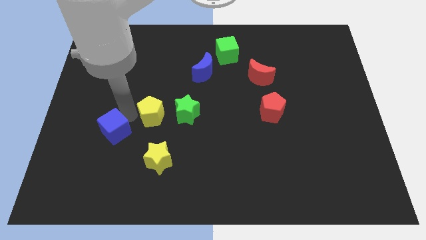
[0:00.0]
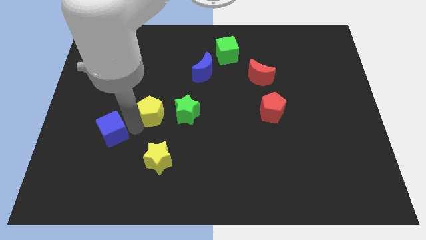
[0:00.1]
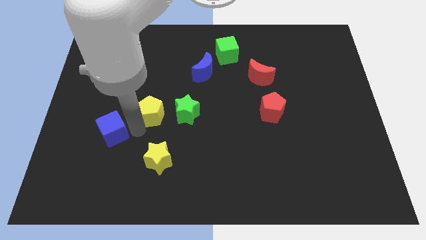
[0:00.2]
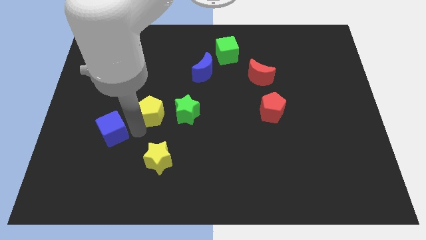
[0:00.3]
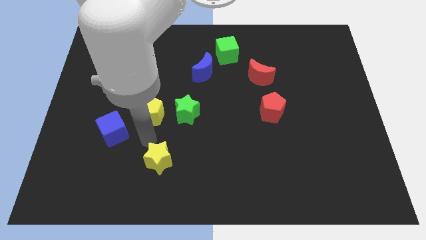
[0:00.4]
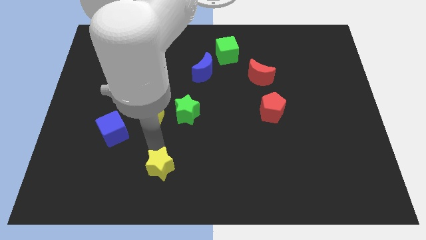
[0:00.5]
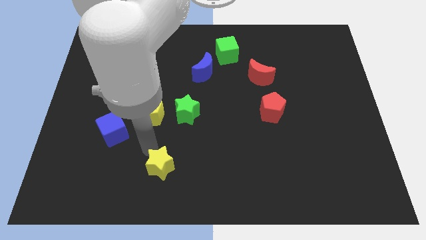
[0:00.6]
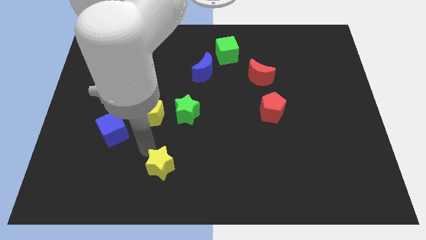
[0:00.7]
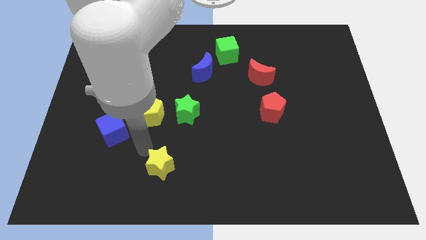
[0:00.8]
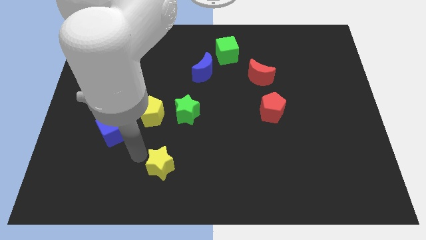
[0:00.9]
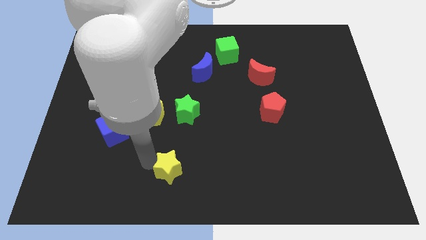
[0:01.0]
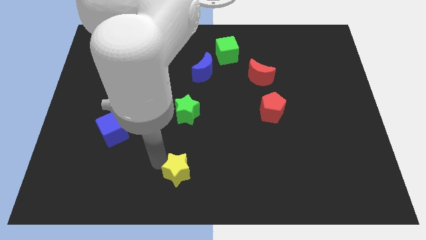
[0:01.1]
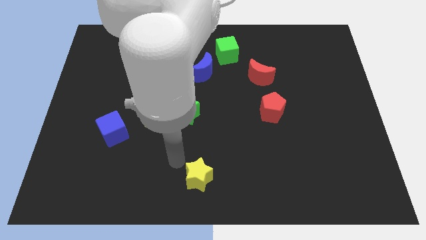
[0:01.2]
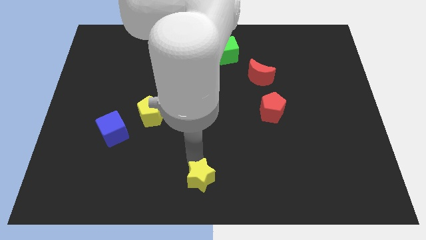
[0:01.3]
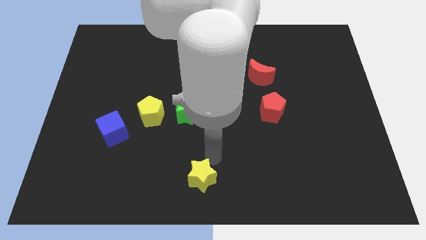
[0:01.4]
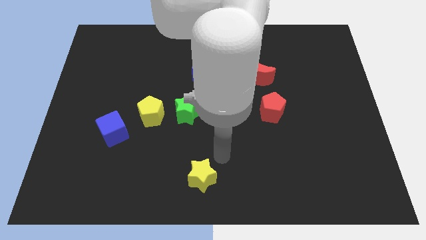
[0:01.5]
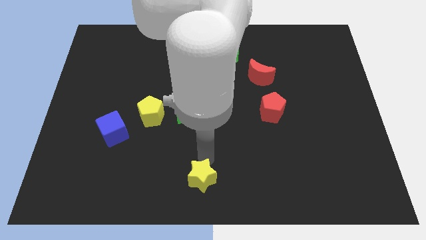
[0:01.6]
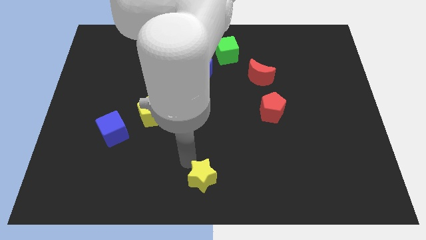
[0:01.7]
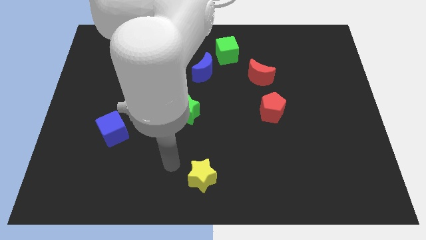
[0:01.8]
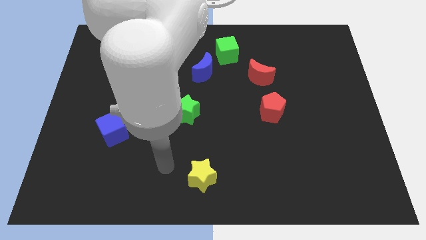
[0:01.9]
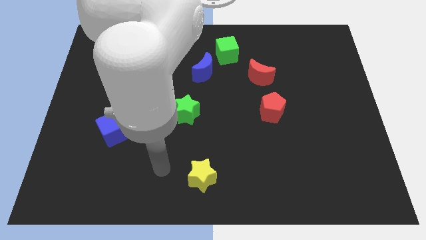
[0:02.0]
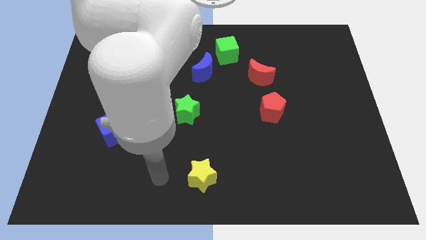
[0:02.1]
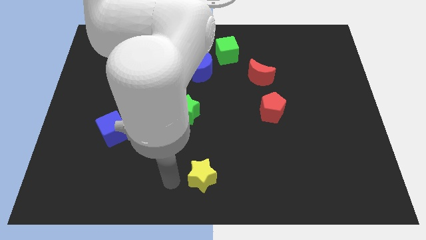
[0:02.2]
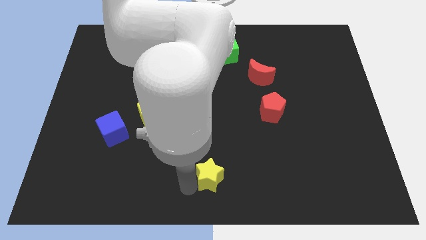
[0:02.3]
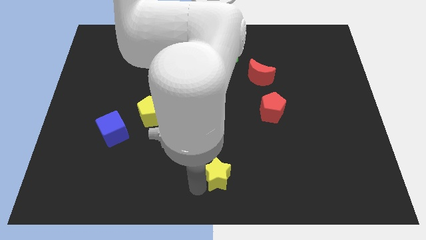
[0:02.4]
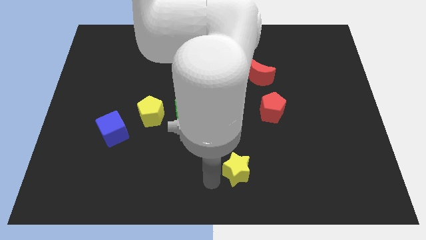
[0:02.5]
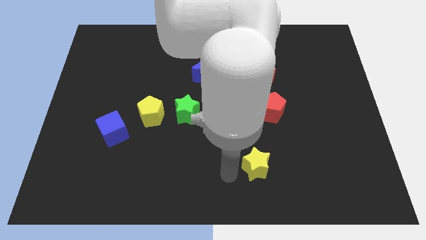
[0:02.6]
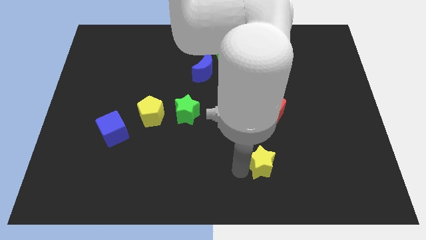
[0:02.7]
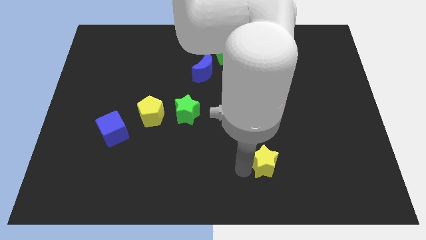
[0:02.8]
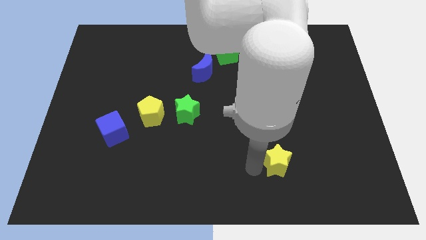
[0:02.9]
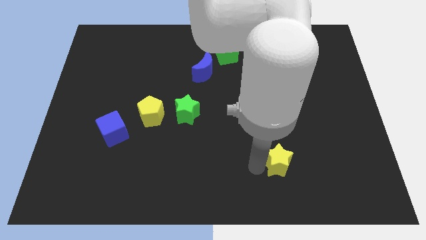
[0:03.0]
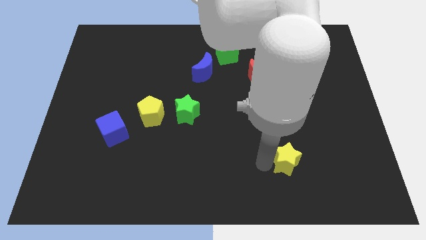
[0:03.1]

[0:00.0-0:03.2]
place yellow star to the bottom of red pentagon

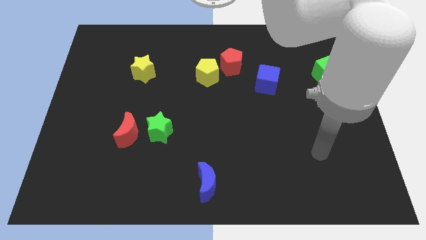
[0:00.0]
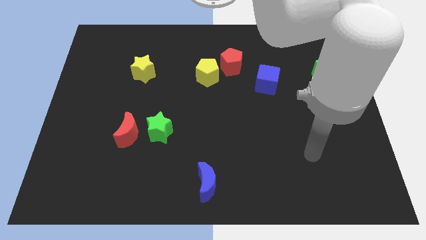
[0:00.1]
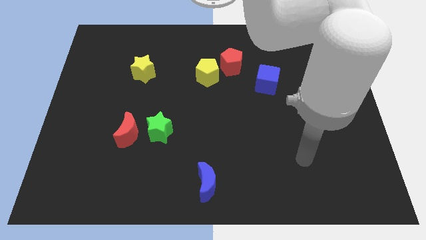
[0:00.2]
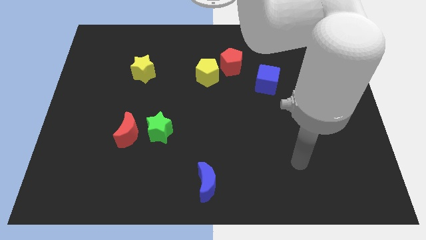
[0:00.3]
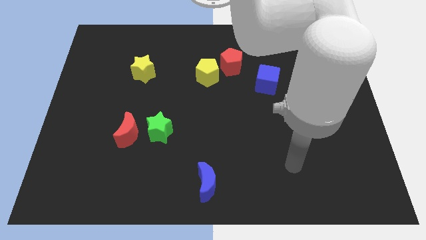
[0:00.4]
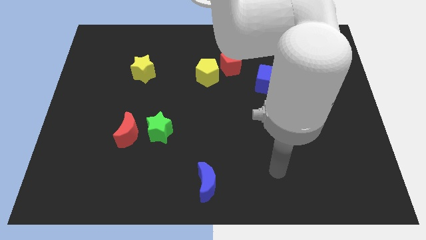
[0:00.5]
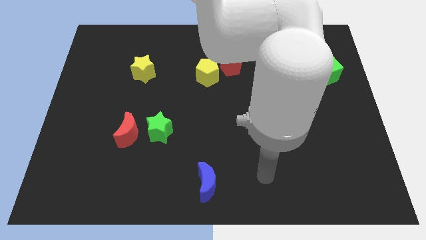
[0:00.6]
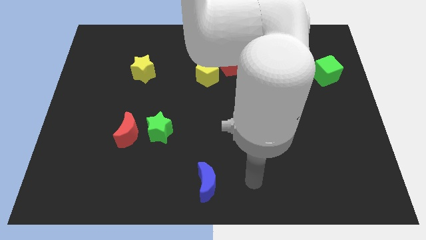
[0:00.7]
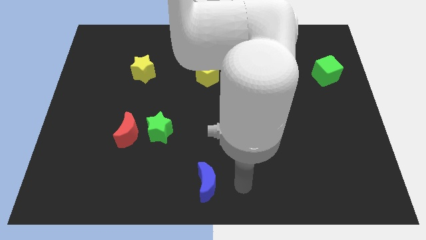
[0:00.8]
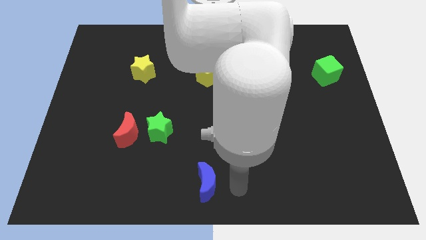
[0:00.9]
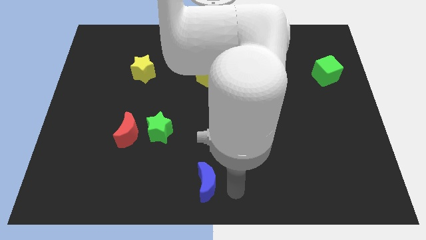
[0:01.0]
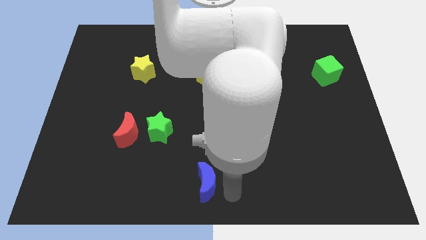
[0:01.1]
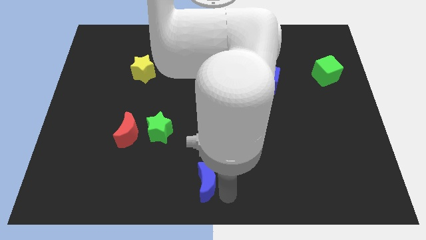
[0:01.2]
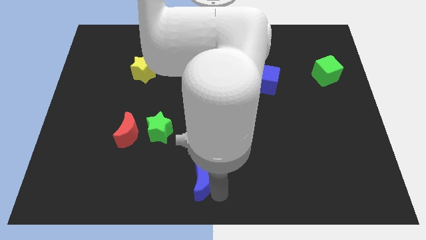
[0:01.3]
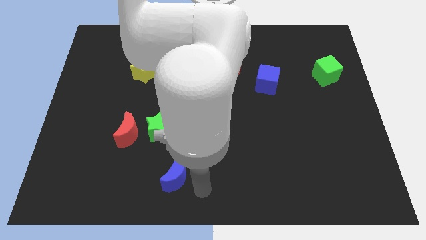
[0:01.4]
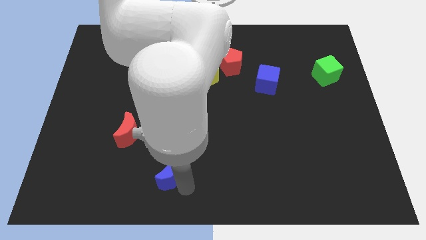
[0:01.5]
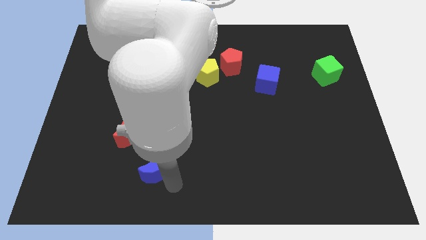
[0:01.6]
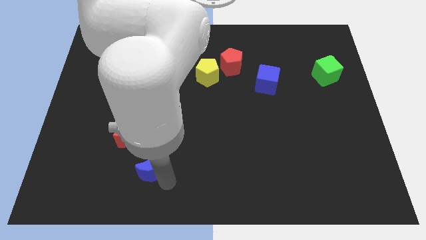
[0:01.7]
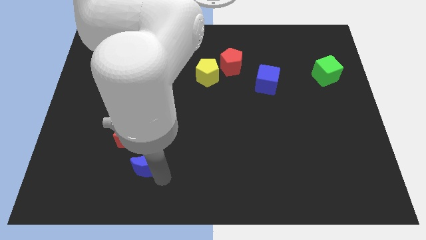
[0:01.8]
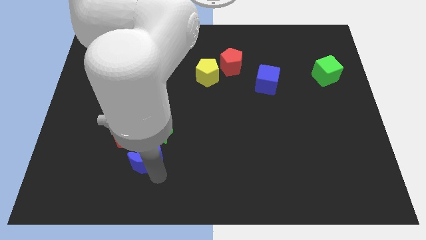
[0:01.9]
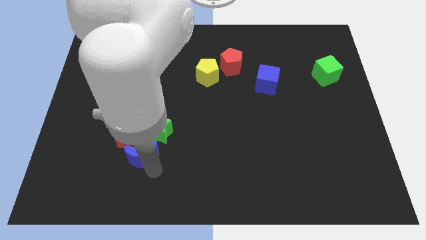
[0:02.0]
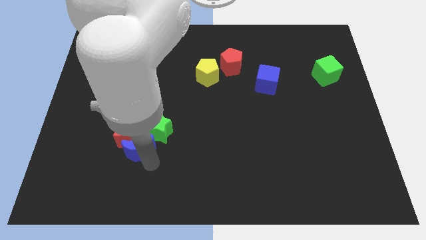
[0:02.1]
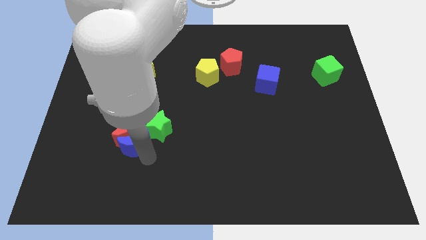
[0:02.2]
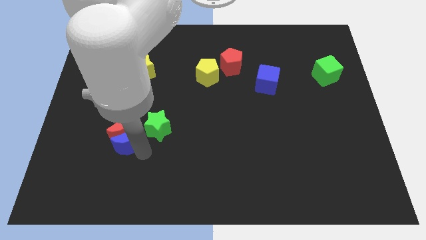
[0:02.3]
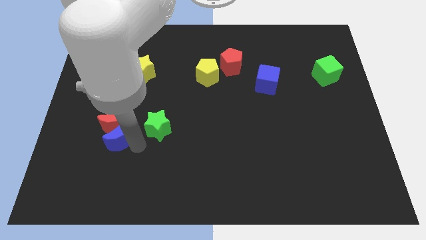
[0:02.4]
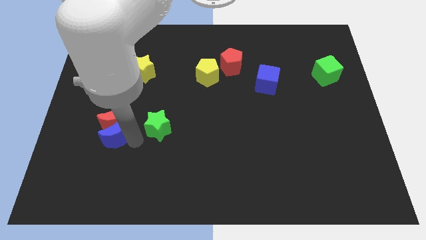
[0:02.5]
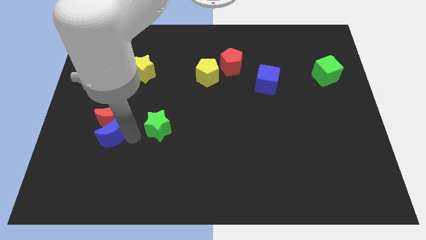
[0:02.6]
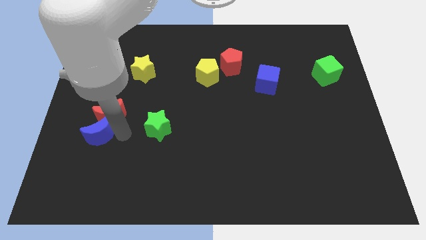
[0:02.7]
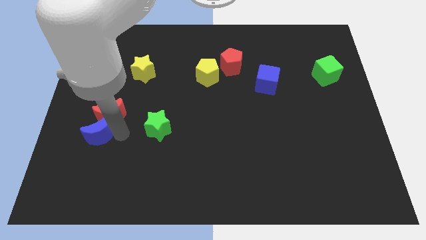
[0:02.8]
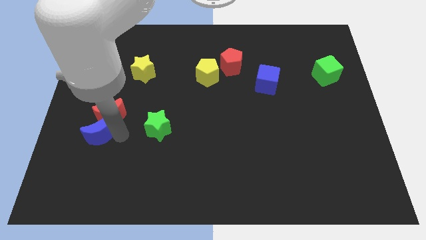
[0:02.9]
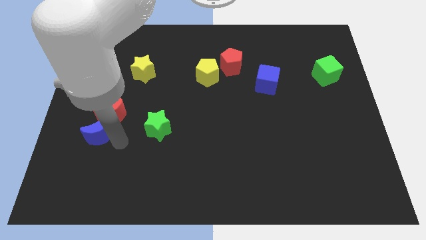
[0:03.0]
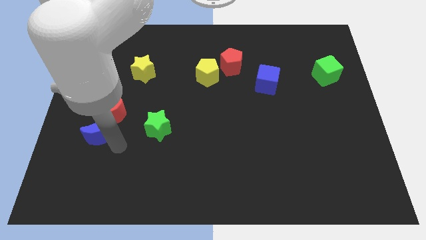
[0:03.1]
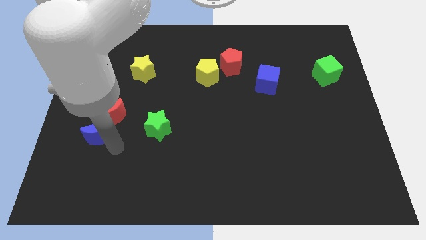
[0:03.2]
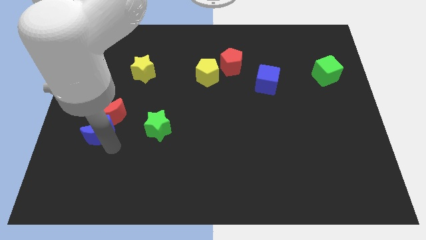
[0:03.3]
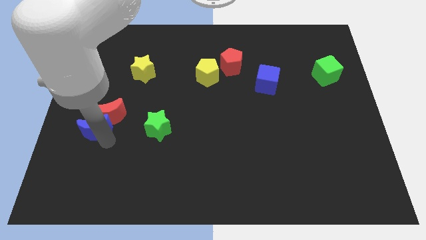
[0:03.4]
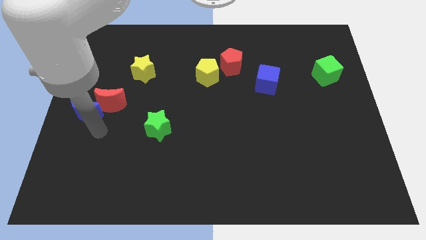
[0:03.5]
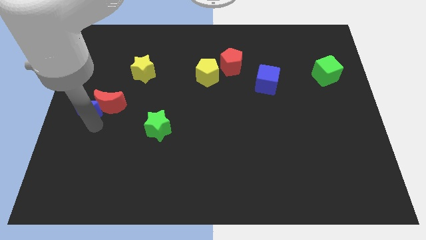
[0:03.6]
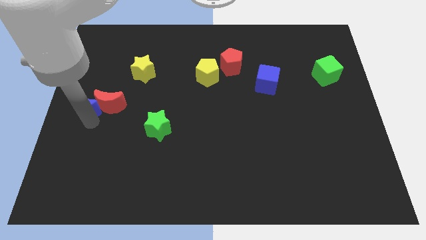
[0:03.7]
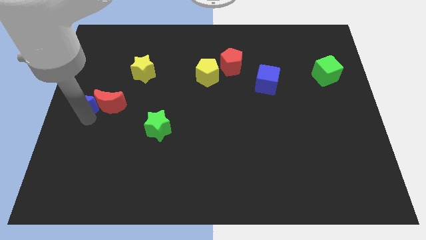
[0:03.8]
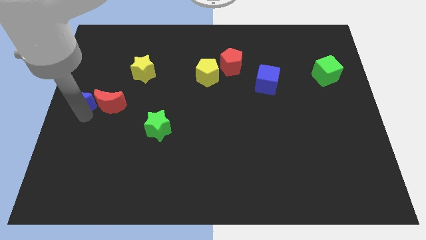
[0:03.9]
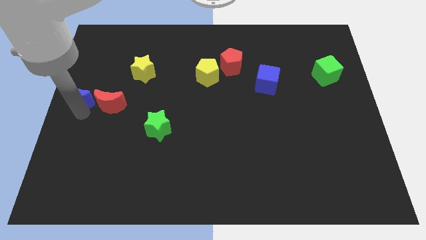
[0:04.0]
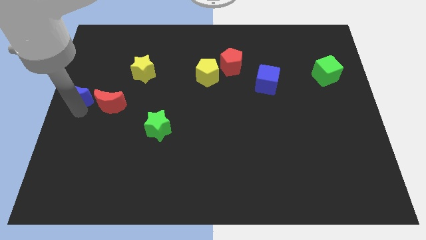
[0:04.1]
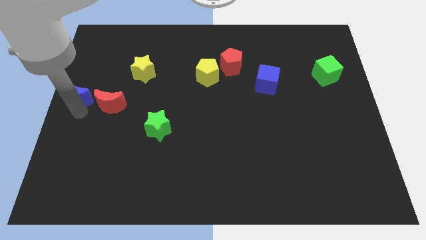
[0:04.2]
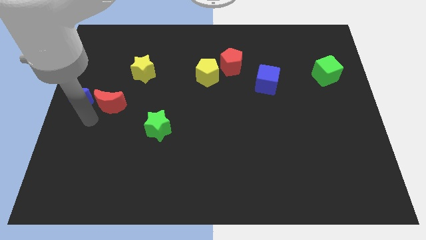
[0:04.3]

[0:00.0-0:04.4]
move the blue crescent to the left center

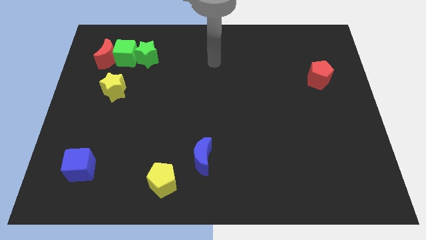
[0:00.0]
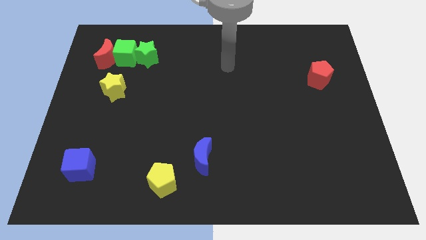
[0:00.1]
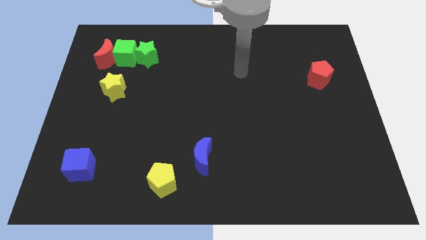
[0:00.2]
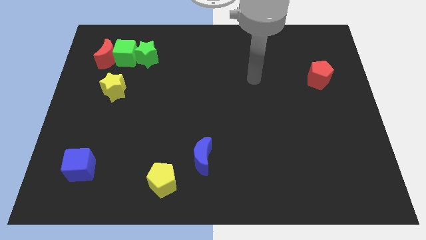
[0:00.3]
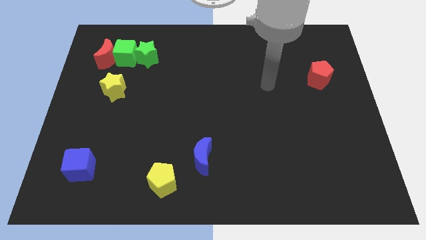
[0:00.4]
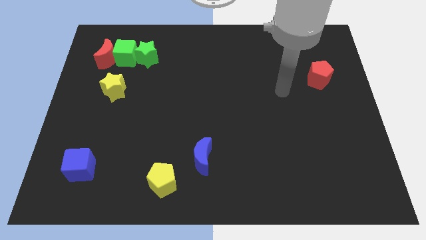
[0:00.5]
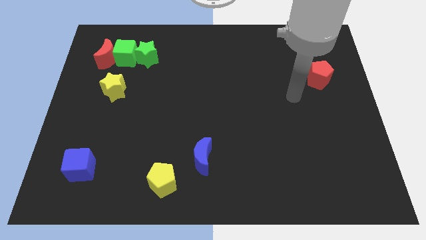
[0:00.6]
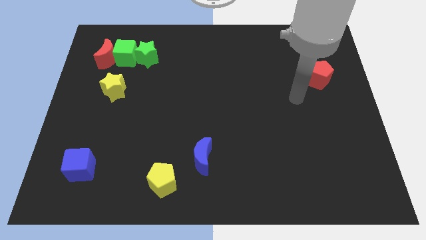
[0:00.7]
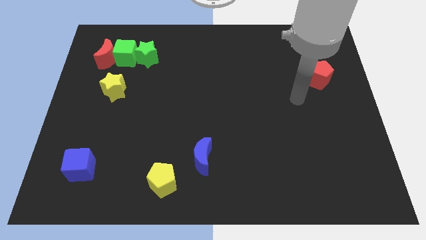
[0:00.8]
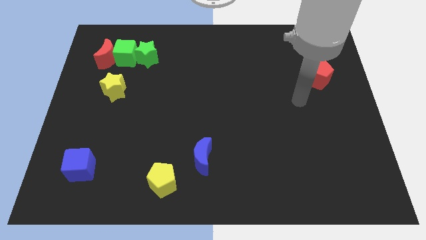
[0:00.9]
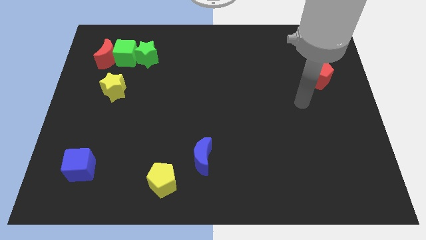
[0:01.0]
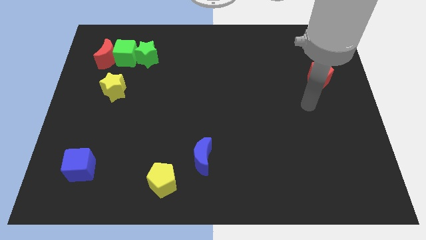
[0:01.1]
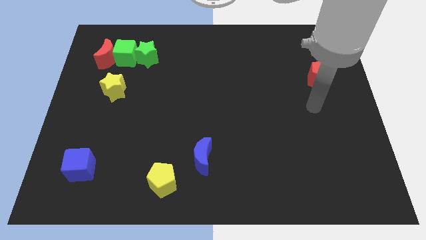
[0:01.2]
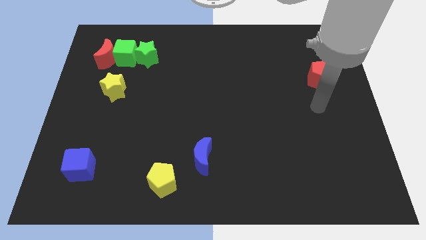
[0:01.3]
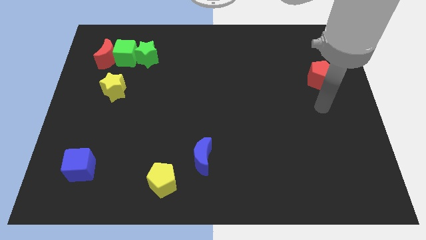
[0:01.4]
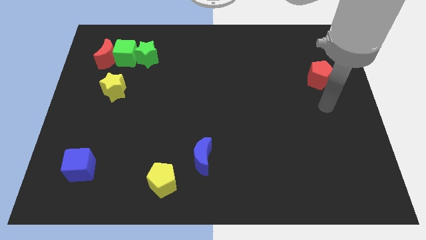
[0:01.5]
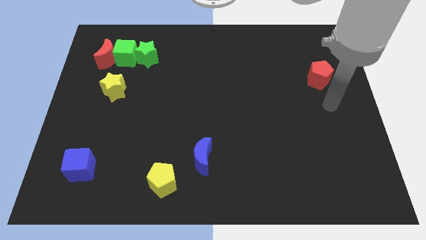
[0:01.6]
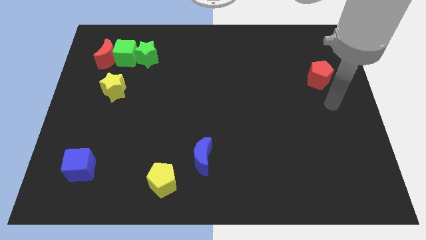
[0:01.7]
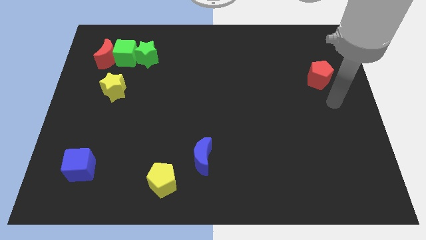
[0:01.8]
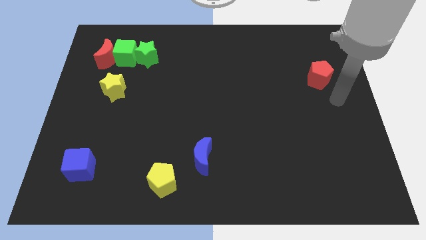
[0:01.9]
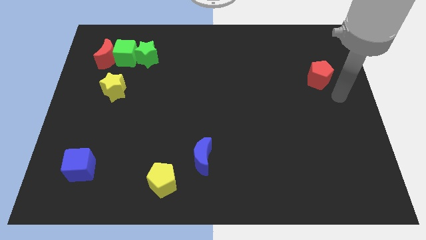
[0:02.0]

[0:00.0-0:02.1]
move your arm towards the red pentagon
